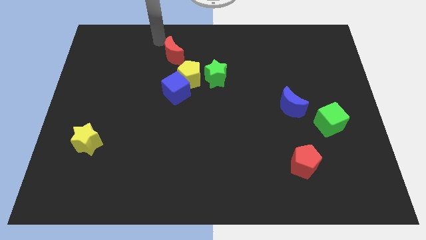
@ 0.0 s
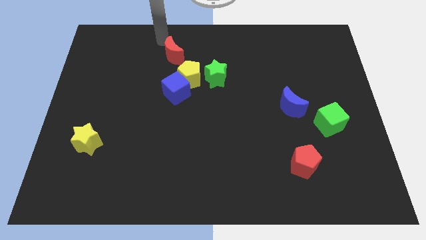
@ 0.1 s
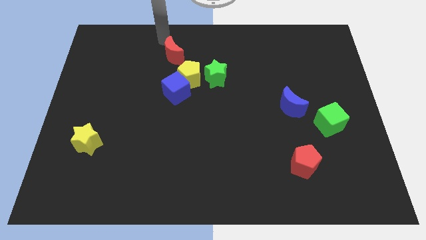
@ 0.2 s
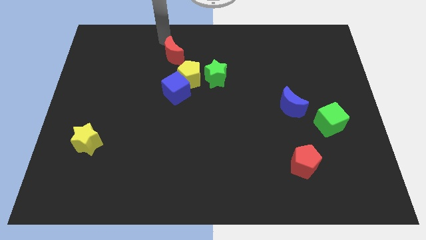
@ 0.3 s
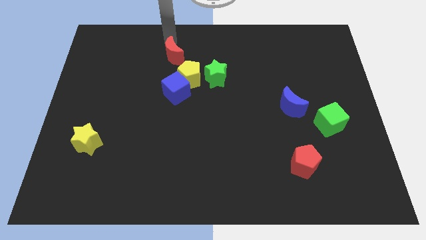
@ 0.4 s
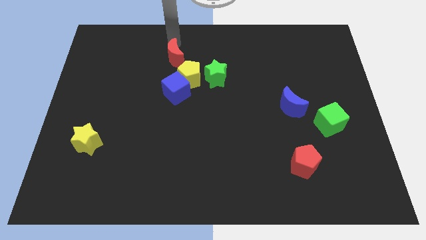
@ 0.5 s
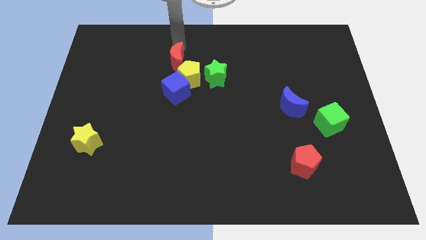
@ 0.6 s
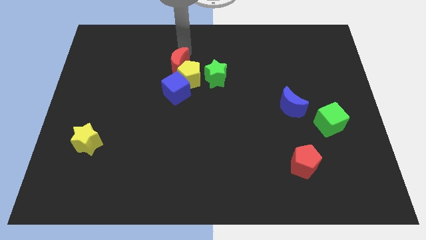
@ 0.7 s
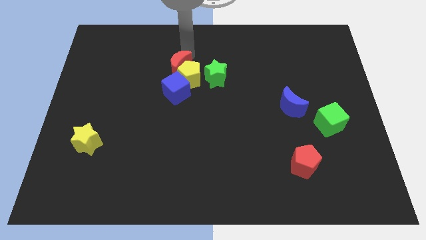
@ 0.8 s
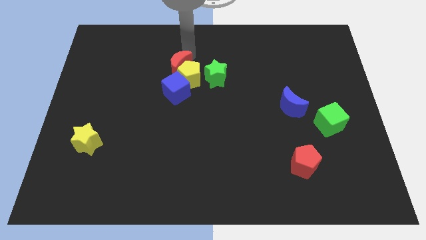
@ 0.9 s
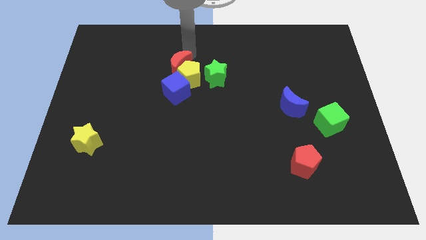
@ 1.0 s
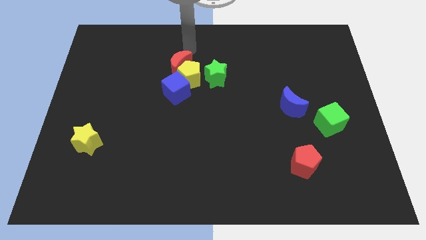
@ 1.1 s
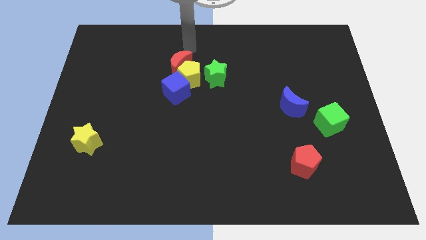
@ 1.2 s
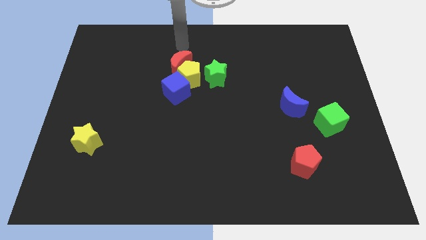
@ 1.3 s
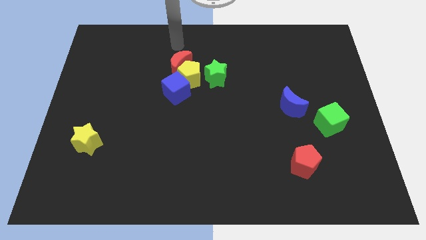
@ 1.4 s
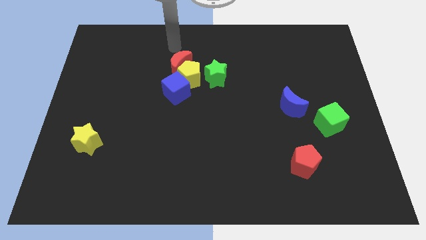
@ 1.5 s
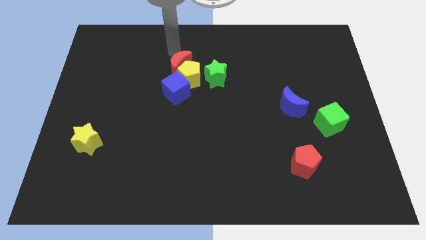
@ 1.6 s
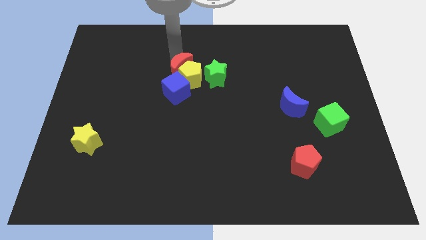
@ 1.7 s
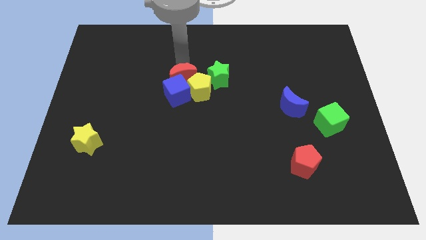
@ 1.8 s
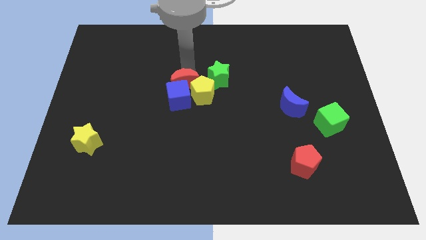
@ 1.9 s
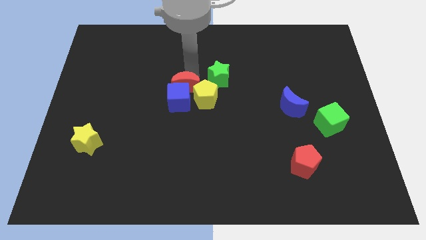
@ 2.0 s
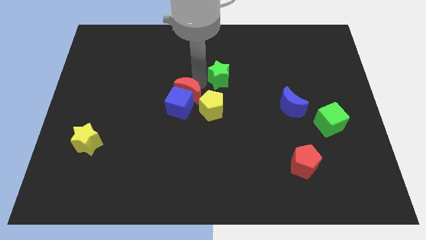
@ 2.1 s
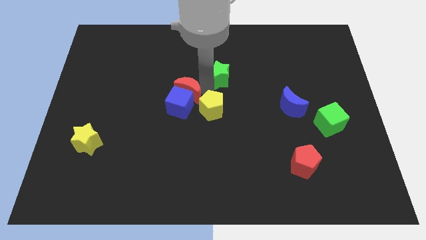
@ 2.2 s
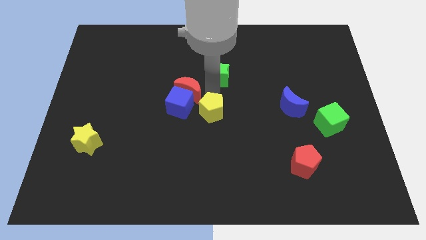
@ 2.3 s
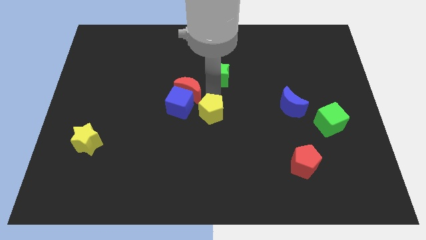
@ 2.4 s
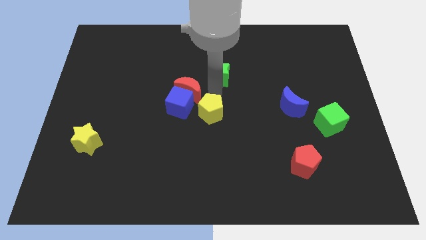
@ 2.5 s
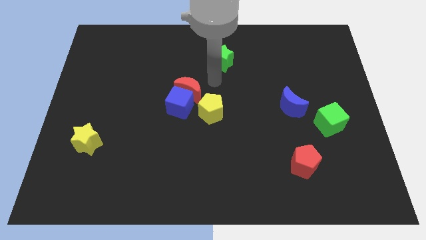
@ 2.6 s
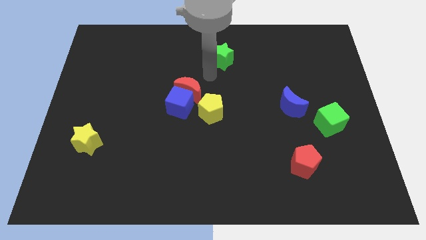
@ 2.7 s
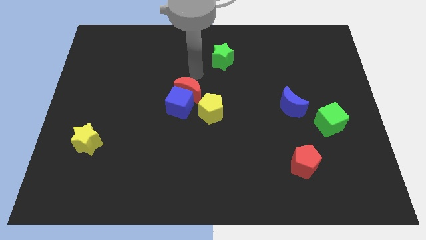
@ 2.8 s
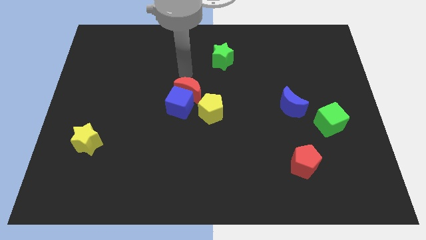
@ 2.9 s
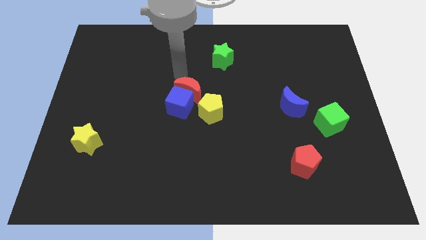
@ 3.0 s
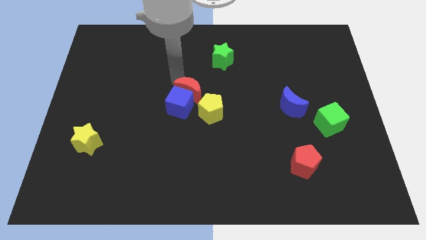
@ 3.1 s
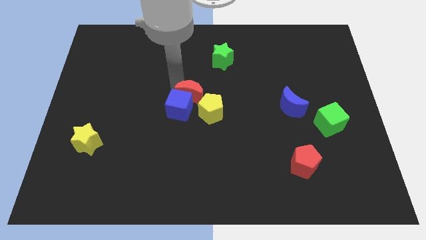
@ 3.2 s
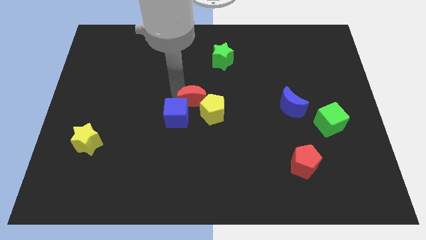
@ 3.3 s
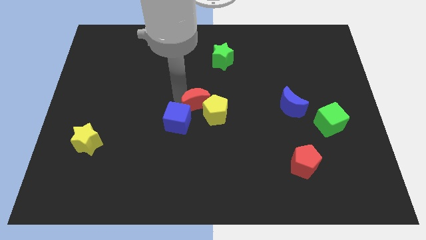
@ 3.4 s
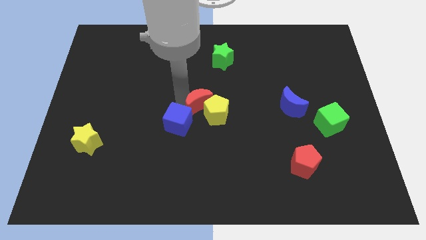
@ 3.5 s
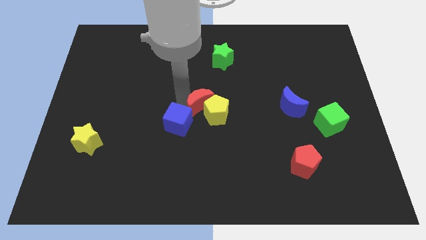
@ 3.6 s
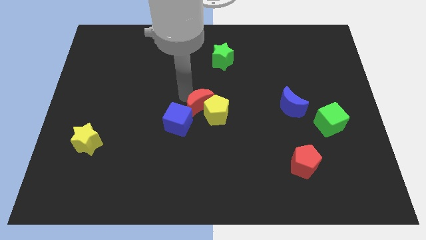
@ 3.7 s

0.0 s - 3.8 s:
push the red crescent into the yellow pentagon

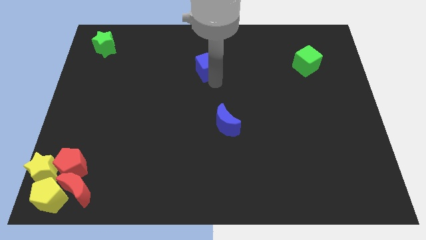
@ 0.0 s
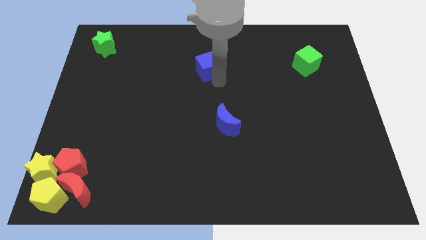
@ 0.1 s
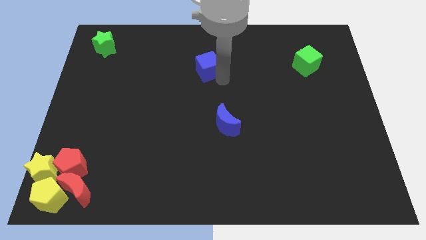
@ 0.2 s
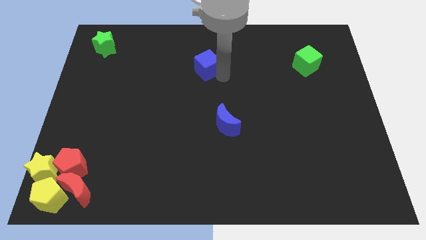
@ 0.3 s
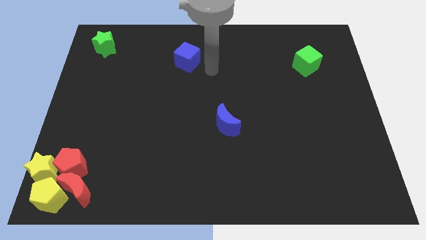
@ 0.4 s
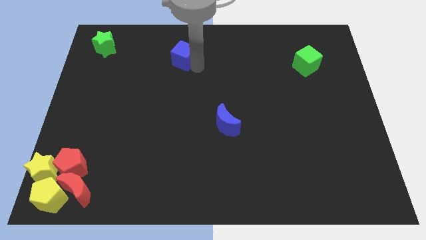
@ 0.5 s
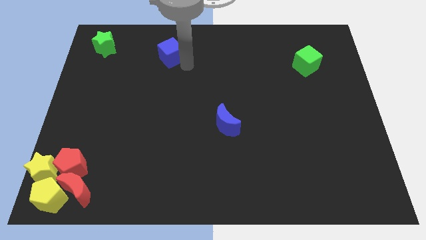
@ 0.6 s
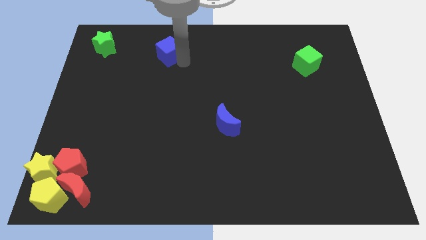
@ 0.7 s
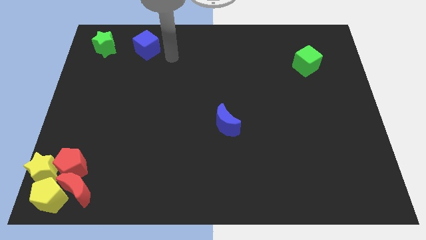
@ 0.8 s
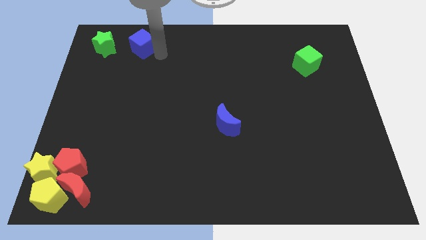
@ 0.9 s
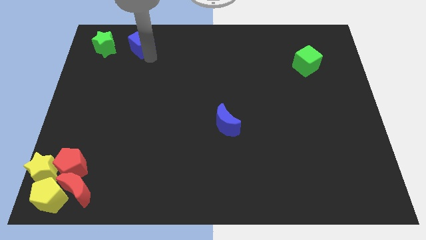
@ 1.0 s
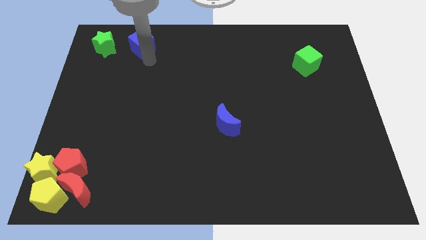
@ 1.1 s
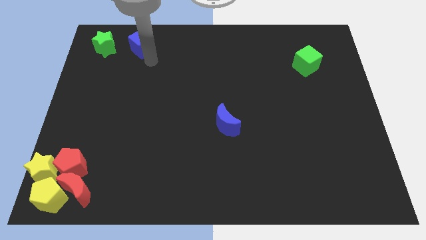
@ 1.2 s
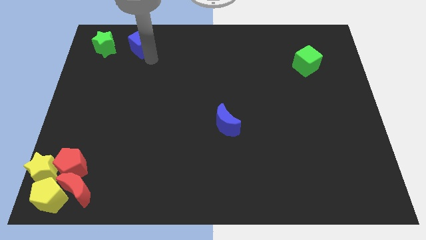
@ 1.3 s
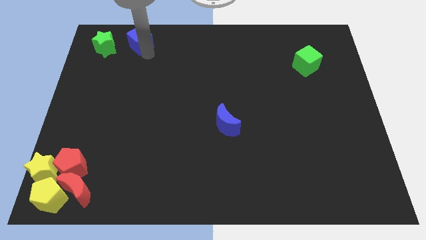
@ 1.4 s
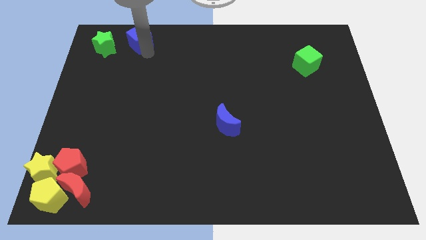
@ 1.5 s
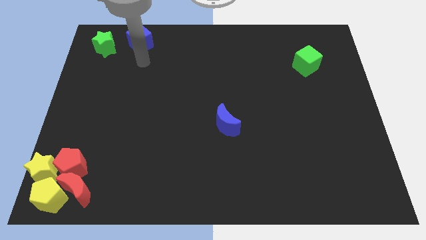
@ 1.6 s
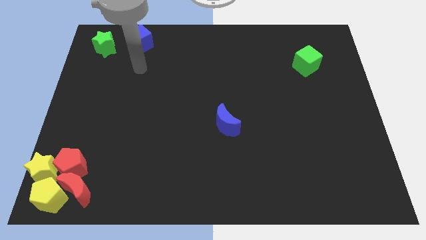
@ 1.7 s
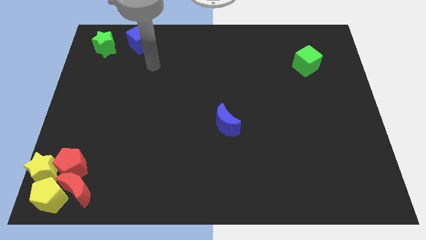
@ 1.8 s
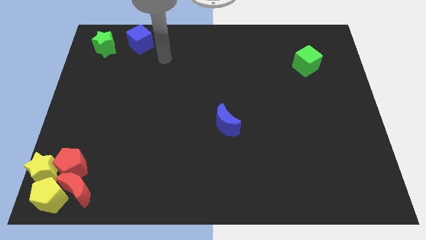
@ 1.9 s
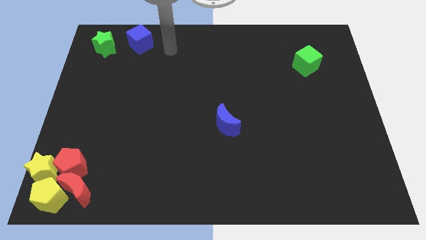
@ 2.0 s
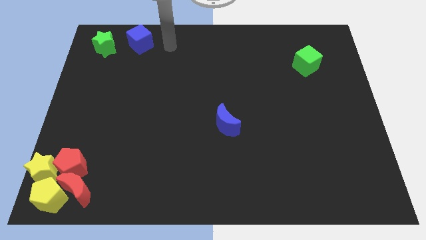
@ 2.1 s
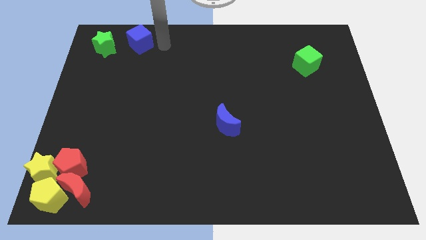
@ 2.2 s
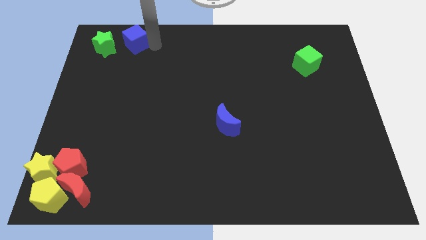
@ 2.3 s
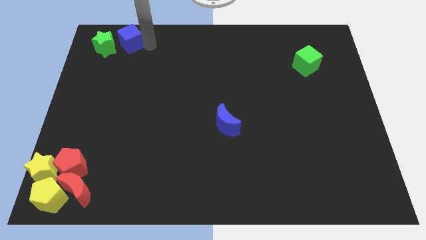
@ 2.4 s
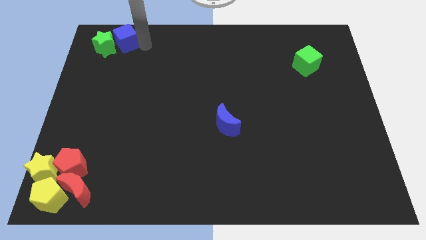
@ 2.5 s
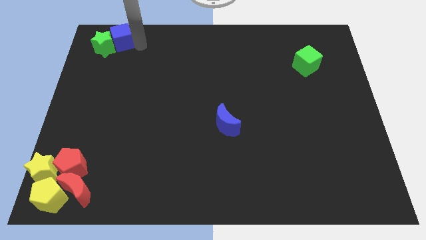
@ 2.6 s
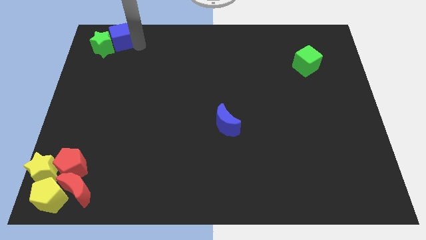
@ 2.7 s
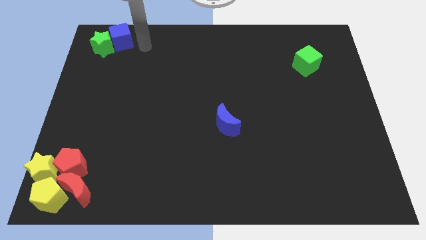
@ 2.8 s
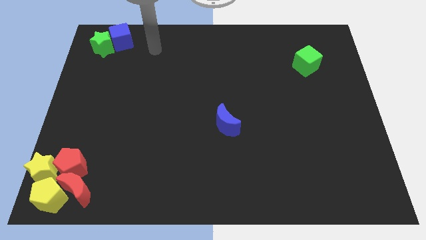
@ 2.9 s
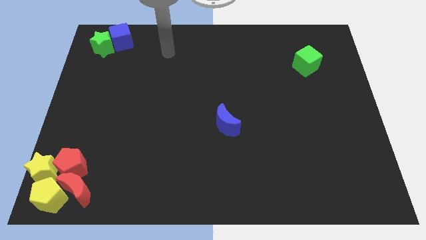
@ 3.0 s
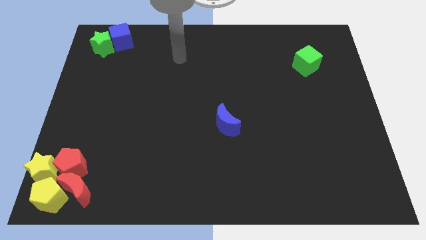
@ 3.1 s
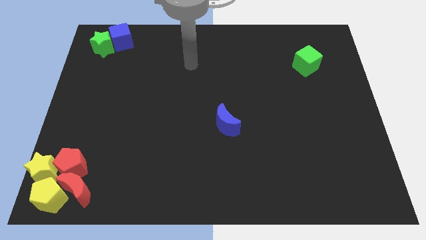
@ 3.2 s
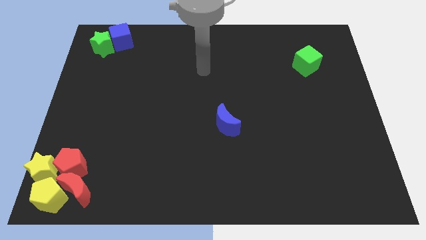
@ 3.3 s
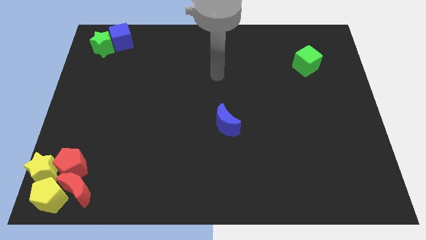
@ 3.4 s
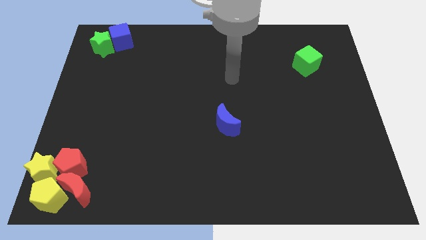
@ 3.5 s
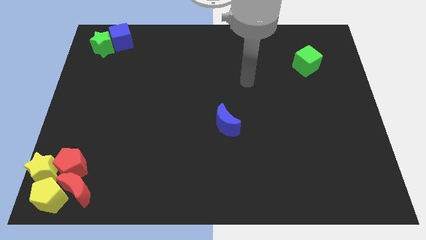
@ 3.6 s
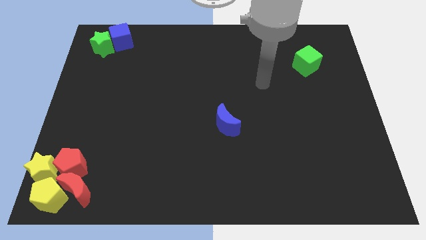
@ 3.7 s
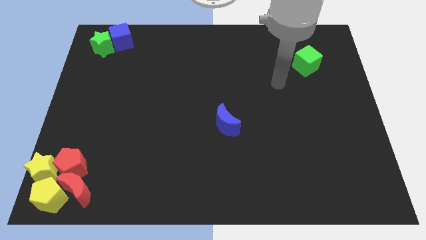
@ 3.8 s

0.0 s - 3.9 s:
push the blue cube into the green star

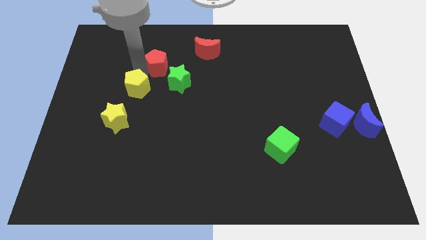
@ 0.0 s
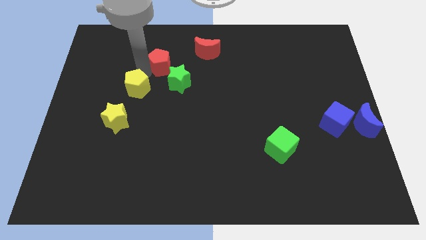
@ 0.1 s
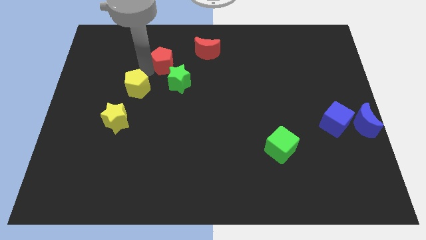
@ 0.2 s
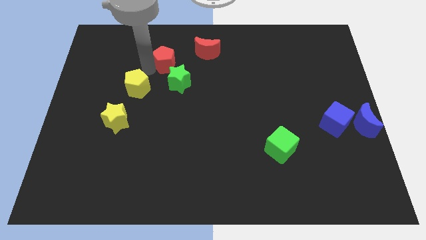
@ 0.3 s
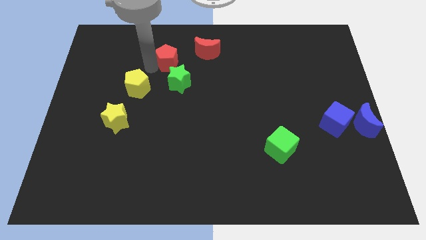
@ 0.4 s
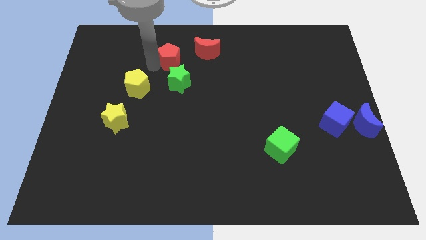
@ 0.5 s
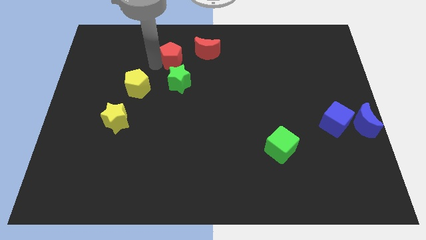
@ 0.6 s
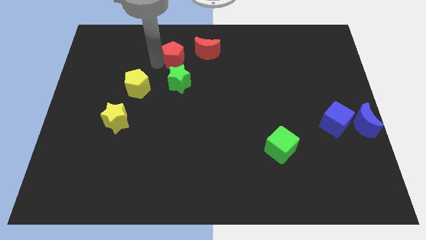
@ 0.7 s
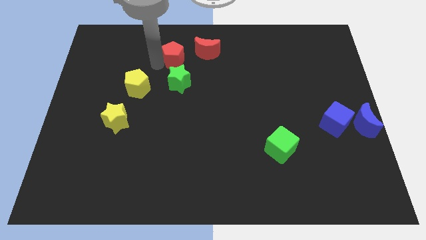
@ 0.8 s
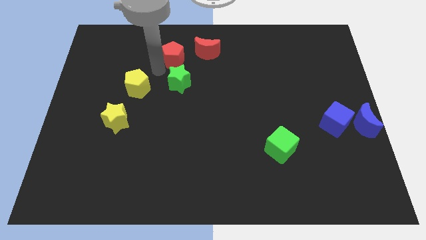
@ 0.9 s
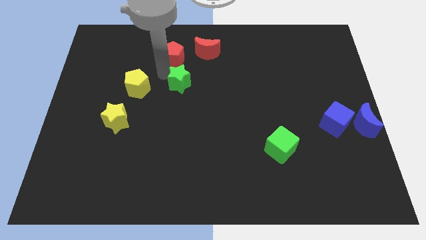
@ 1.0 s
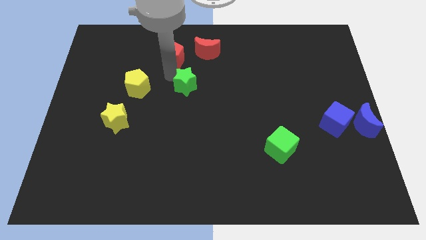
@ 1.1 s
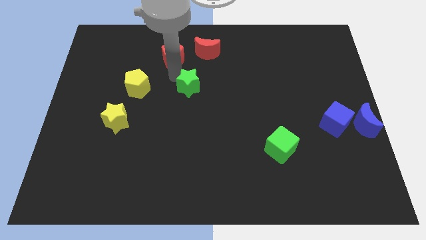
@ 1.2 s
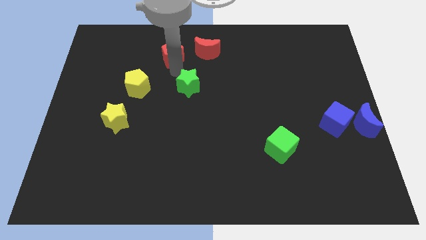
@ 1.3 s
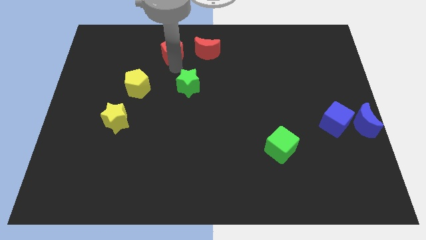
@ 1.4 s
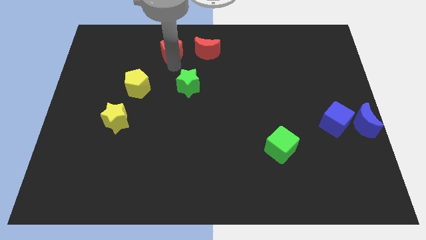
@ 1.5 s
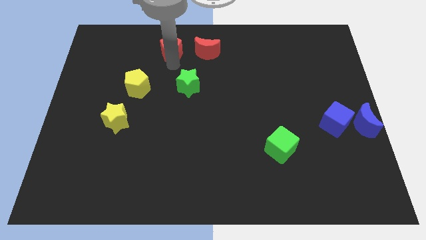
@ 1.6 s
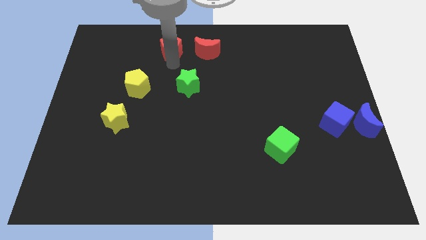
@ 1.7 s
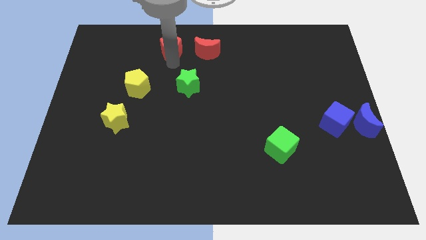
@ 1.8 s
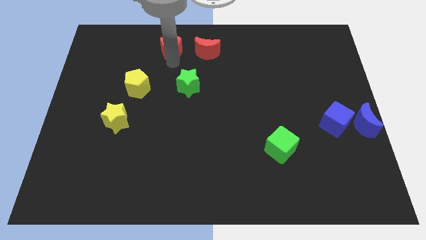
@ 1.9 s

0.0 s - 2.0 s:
place the red pentagon to the left of red crescent
